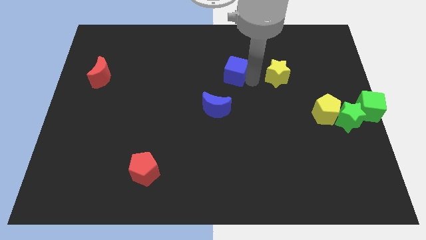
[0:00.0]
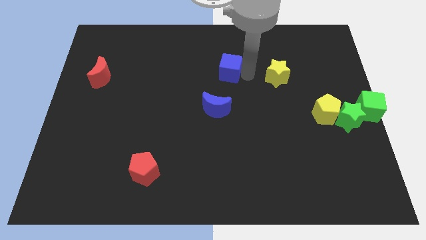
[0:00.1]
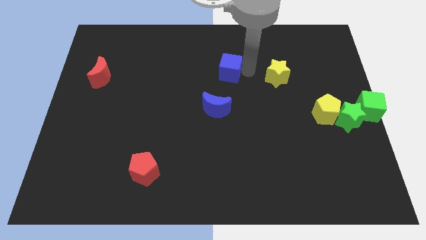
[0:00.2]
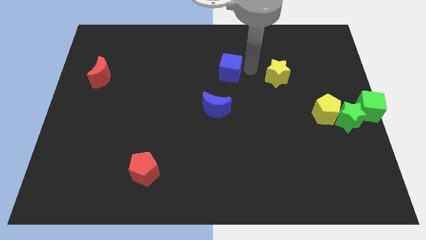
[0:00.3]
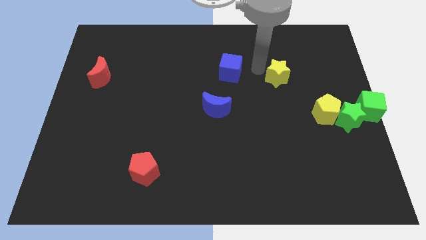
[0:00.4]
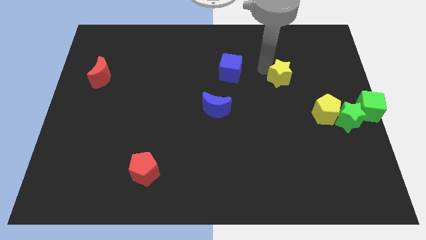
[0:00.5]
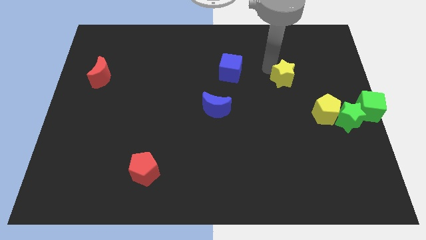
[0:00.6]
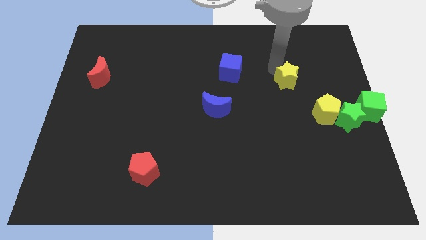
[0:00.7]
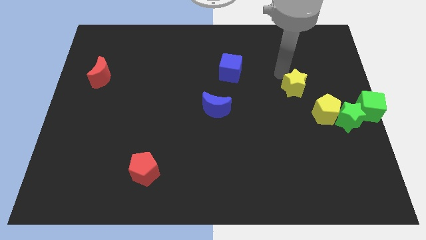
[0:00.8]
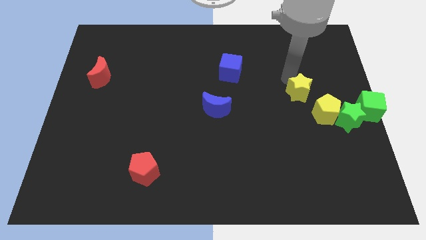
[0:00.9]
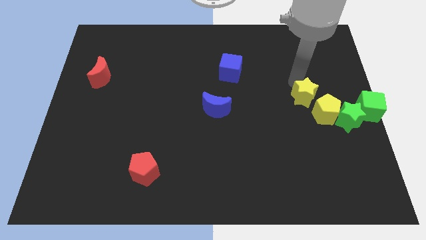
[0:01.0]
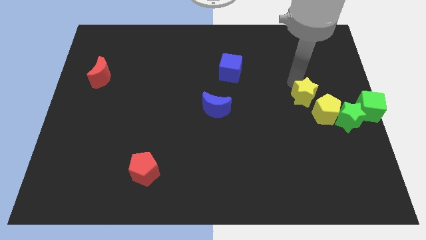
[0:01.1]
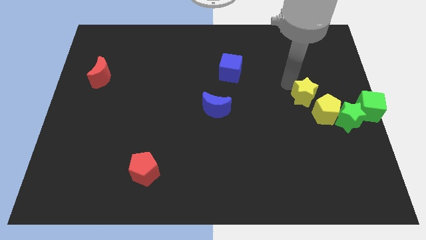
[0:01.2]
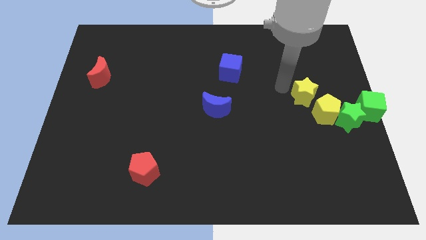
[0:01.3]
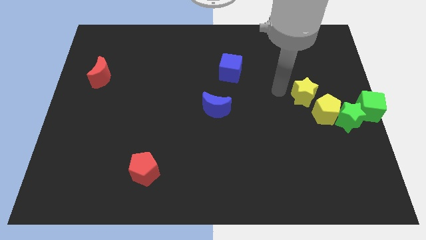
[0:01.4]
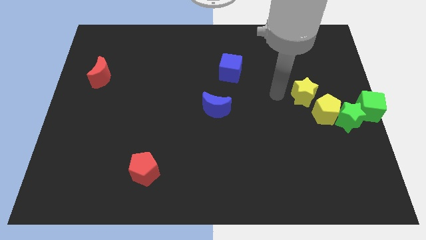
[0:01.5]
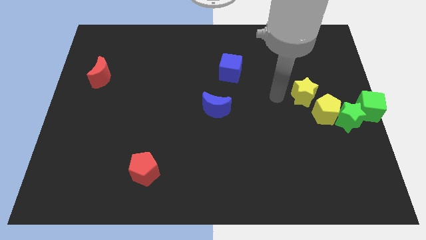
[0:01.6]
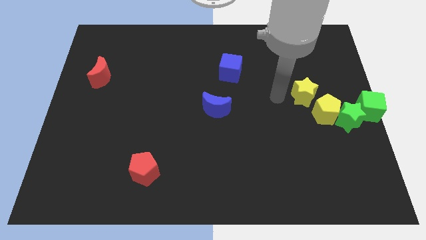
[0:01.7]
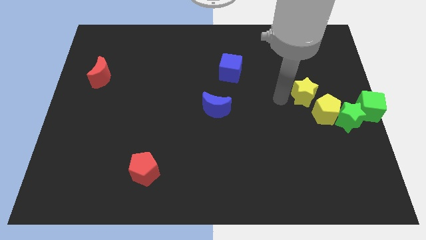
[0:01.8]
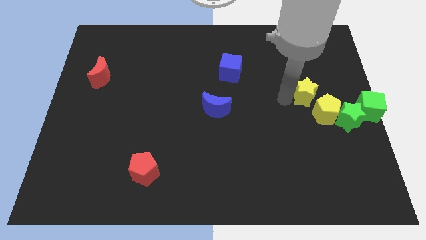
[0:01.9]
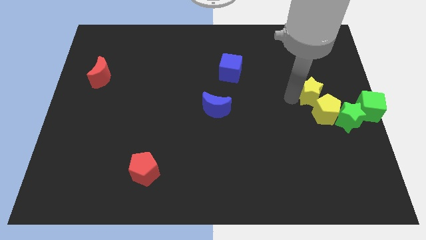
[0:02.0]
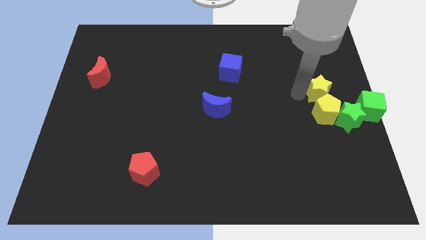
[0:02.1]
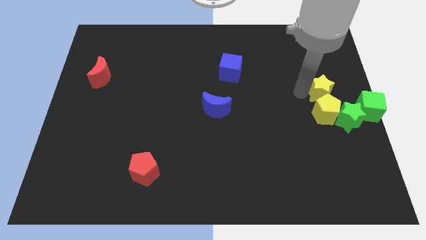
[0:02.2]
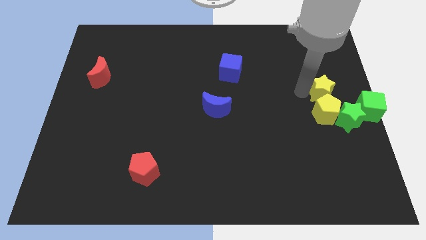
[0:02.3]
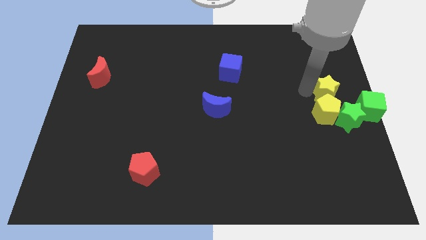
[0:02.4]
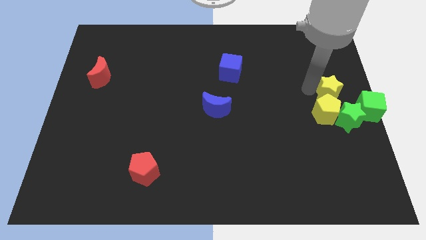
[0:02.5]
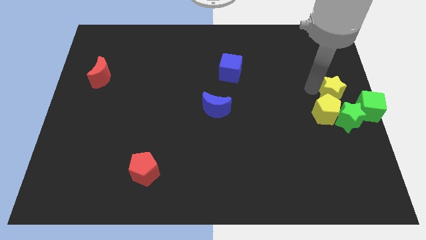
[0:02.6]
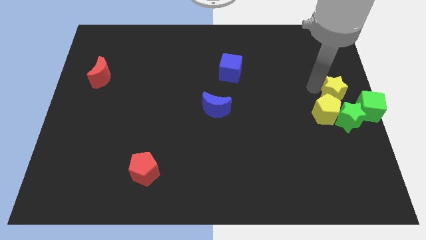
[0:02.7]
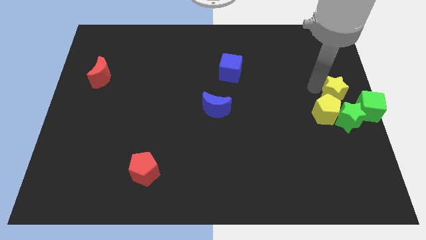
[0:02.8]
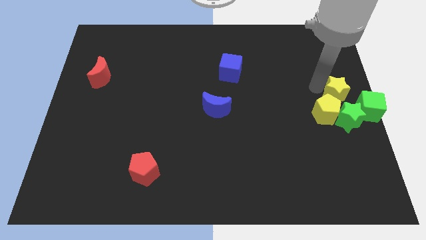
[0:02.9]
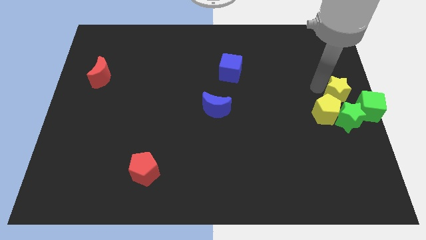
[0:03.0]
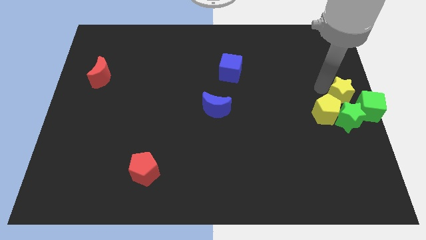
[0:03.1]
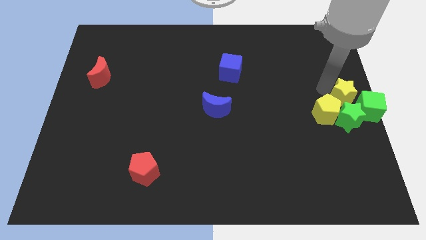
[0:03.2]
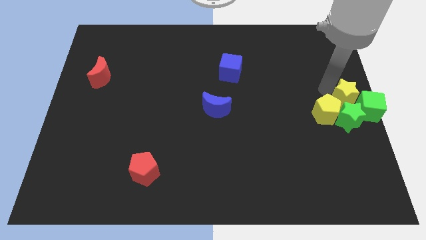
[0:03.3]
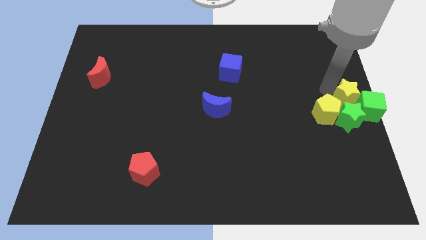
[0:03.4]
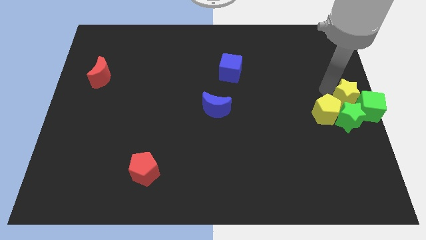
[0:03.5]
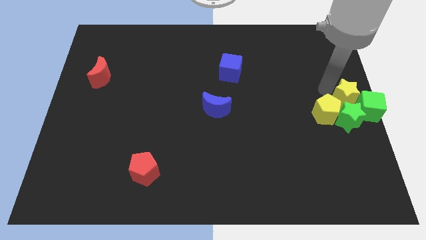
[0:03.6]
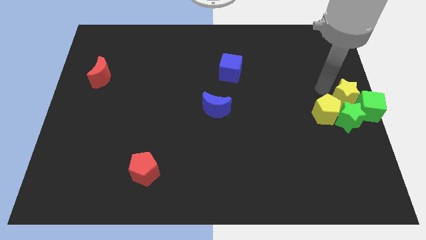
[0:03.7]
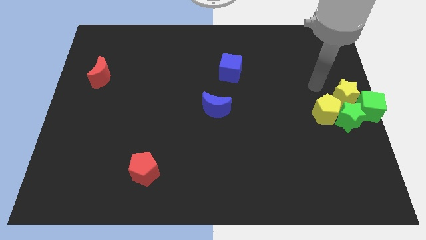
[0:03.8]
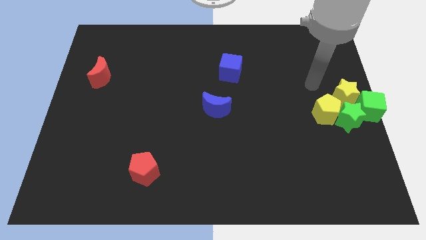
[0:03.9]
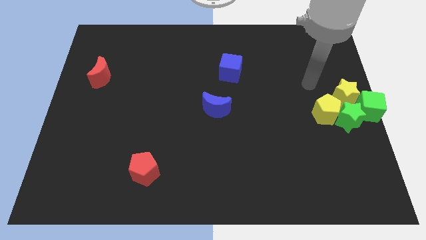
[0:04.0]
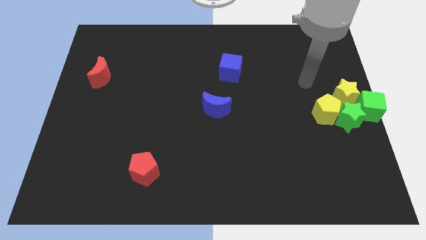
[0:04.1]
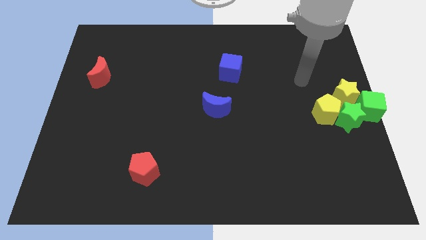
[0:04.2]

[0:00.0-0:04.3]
push the yellow star away from the blue cube

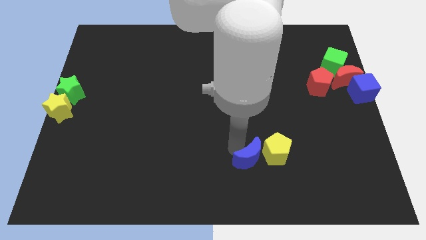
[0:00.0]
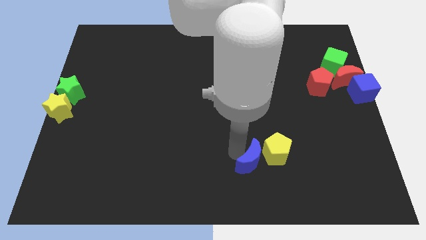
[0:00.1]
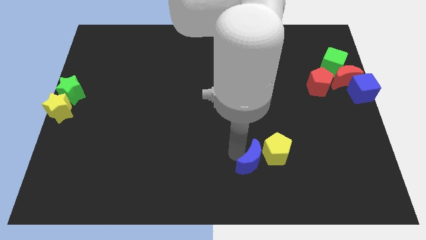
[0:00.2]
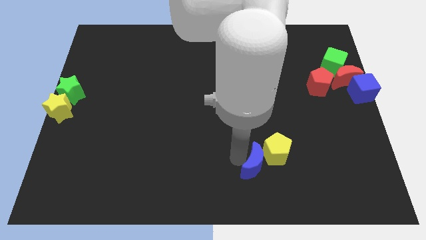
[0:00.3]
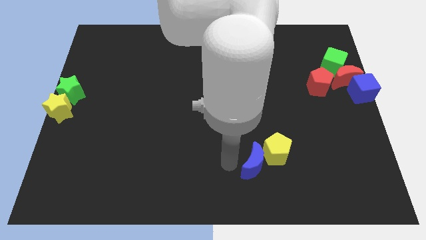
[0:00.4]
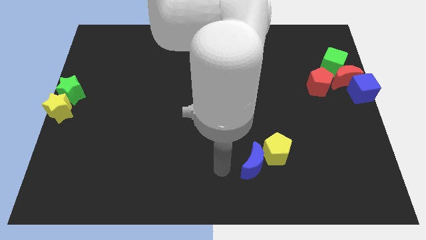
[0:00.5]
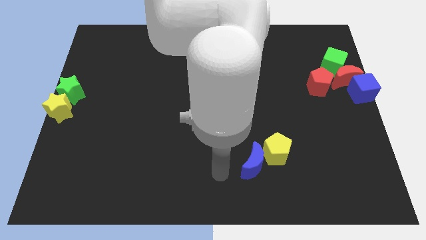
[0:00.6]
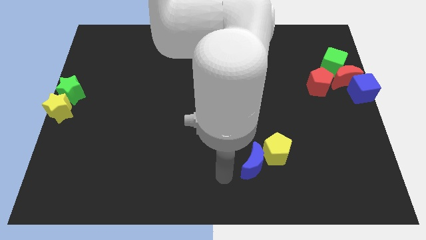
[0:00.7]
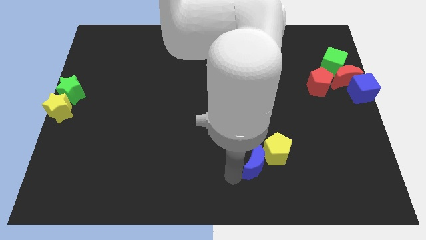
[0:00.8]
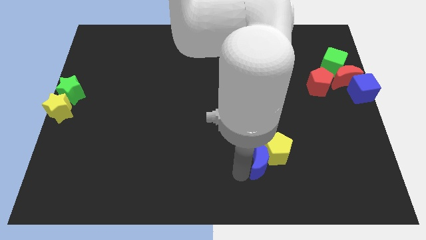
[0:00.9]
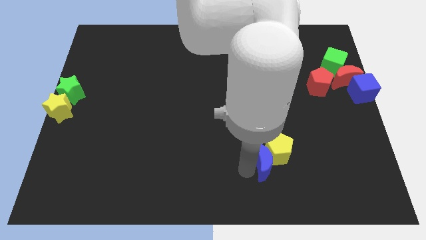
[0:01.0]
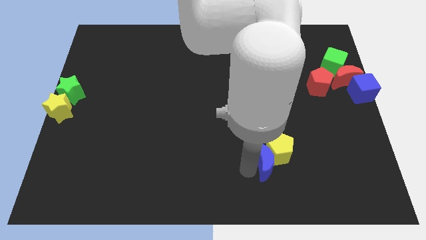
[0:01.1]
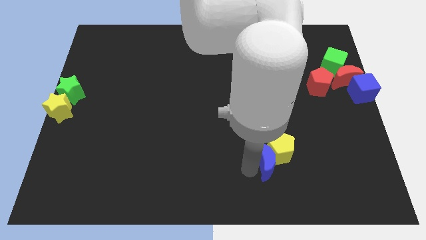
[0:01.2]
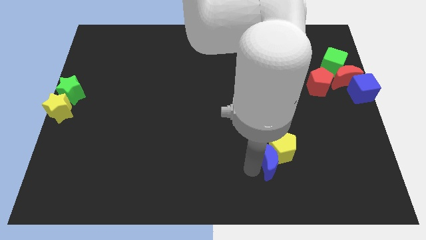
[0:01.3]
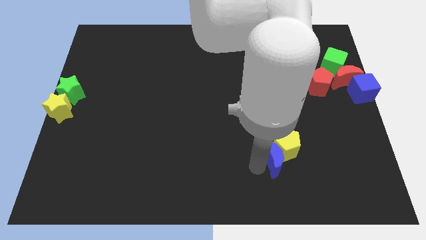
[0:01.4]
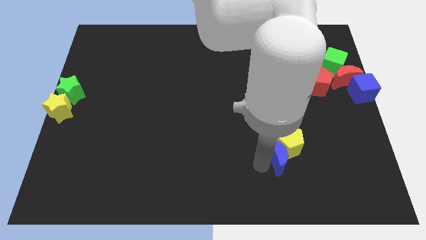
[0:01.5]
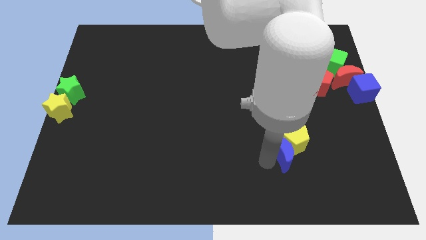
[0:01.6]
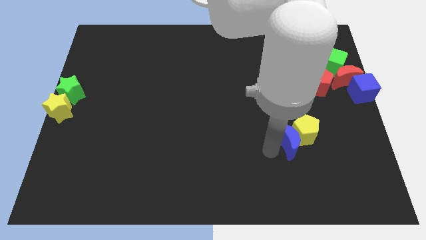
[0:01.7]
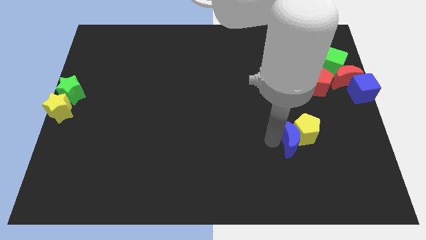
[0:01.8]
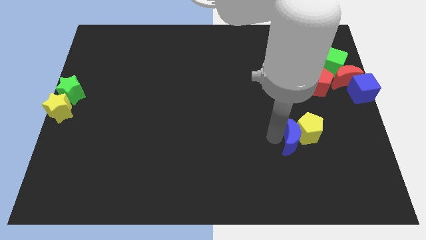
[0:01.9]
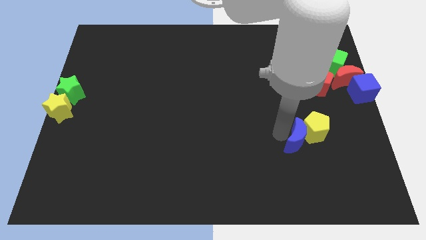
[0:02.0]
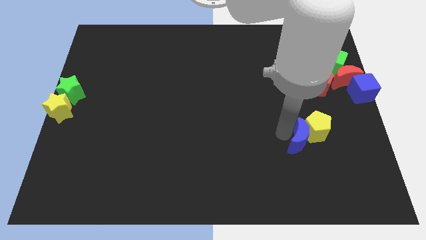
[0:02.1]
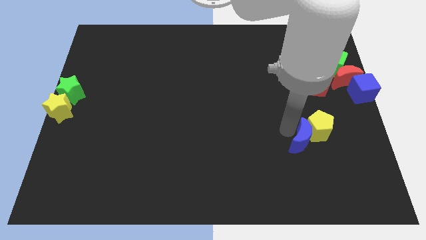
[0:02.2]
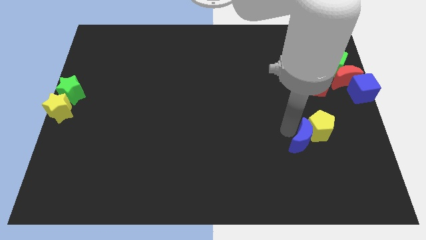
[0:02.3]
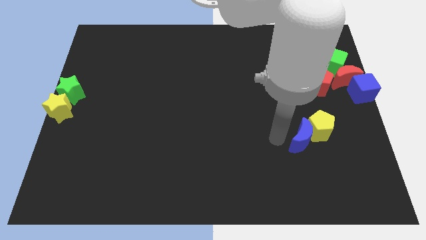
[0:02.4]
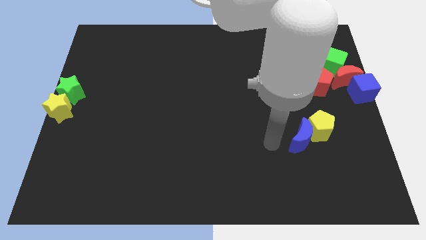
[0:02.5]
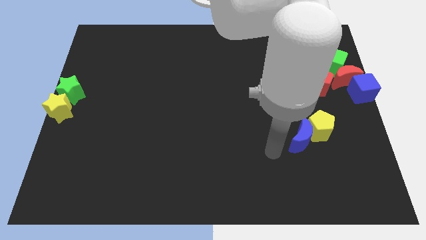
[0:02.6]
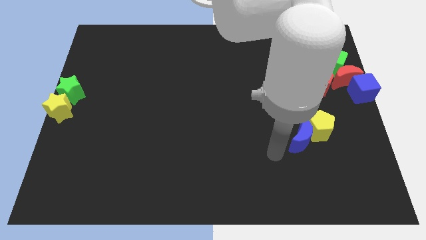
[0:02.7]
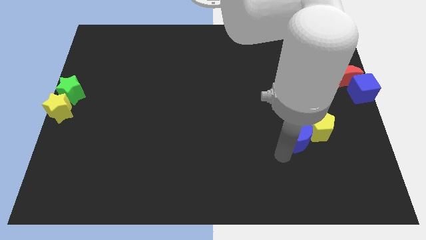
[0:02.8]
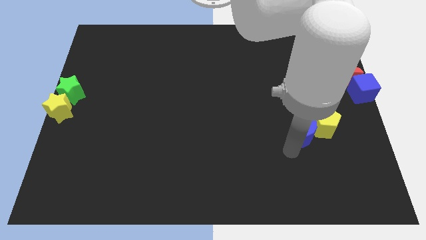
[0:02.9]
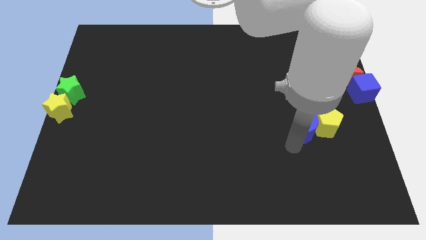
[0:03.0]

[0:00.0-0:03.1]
move blue moon and yellow pentagon towards the center right

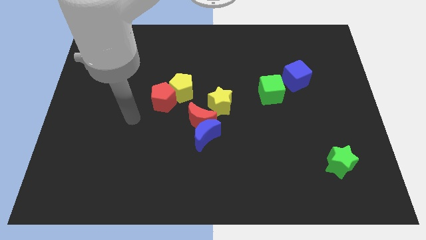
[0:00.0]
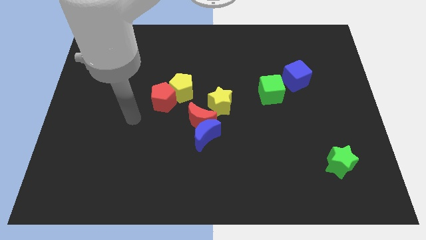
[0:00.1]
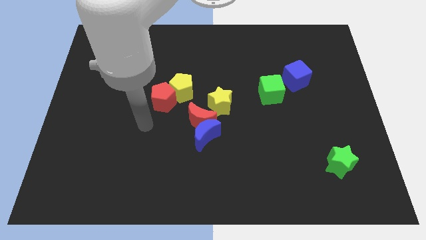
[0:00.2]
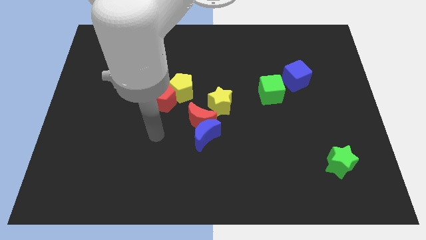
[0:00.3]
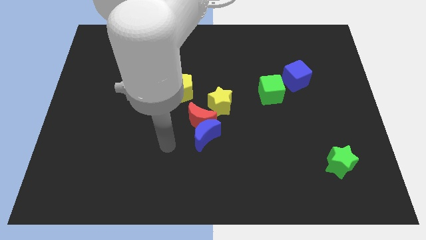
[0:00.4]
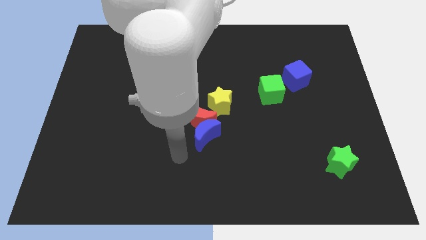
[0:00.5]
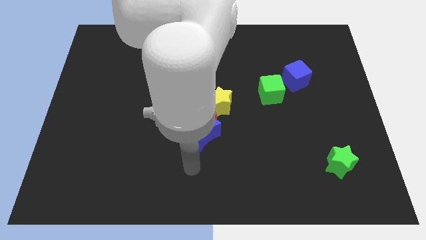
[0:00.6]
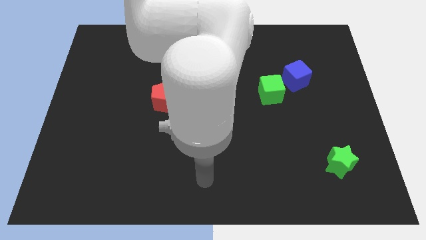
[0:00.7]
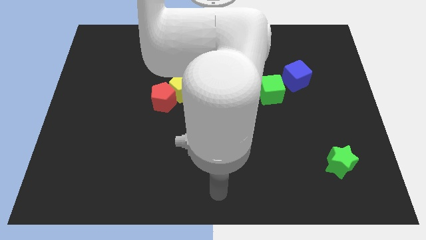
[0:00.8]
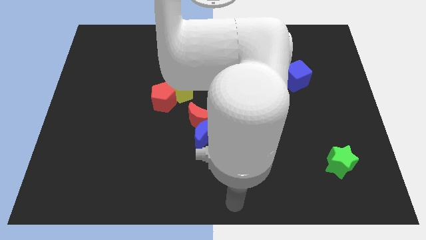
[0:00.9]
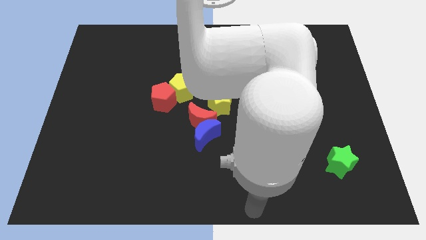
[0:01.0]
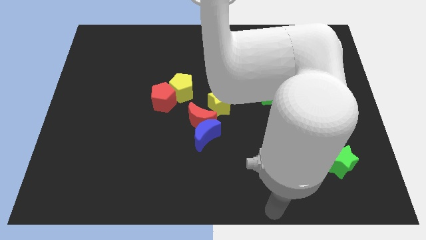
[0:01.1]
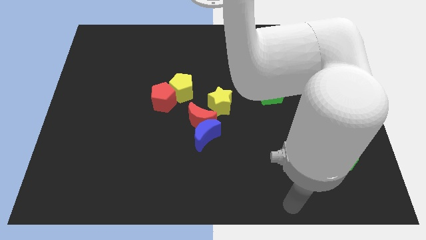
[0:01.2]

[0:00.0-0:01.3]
move your hand towards the bottom right

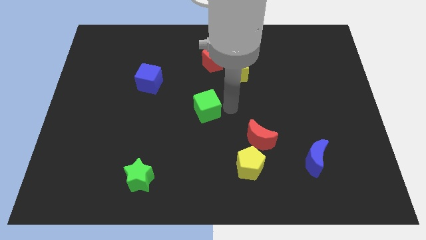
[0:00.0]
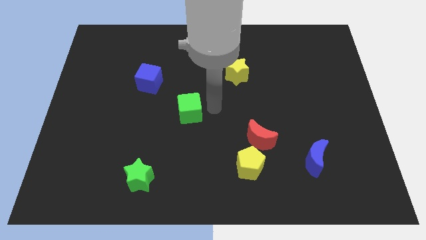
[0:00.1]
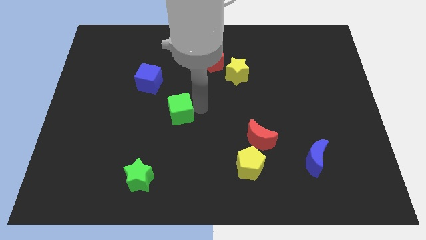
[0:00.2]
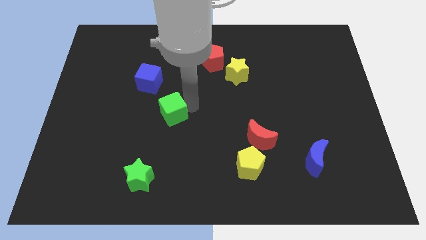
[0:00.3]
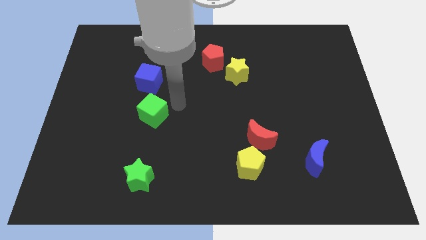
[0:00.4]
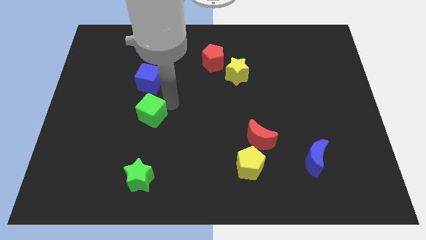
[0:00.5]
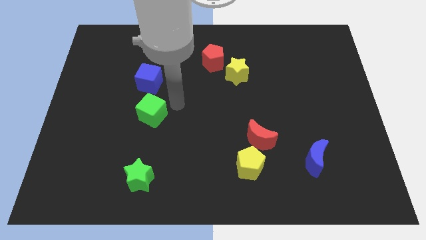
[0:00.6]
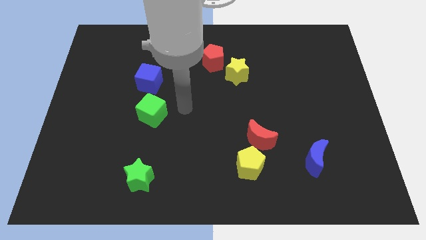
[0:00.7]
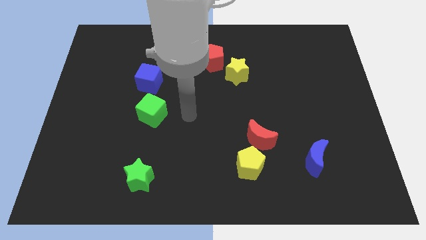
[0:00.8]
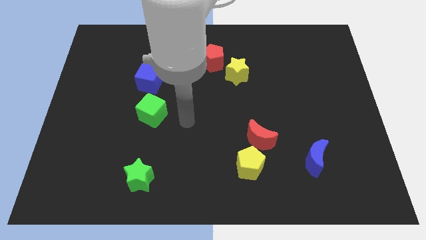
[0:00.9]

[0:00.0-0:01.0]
drag the green cube to the left
